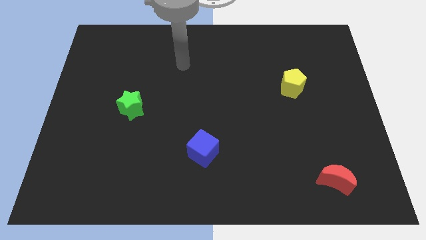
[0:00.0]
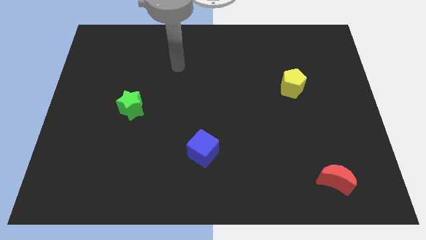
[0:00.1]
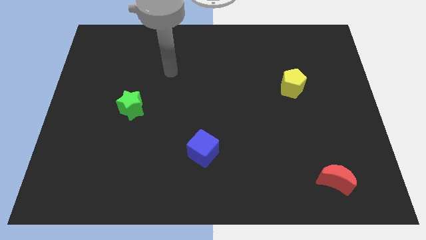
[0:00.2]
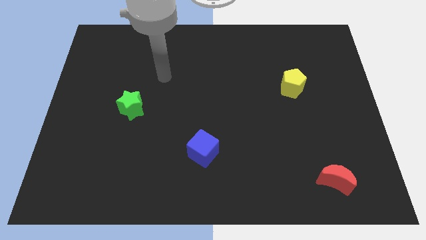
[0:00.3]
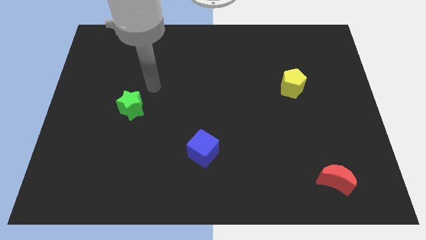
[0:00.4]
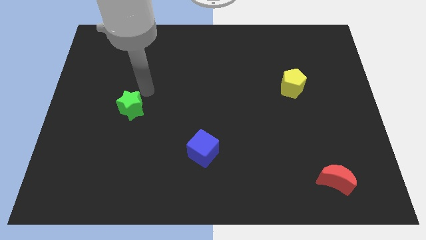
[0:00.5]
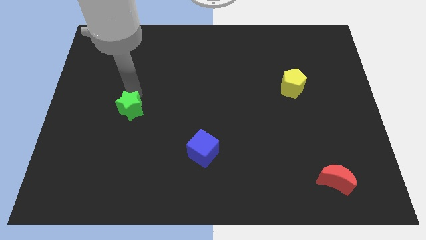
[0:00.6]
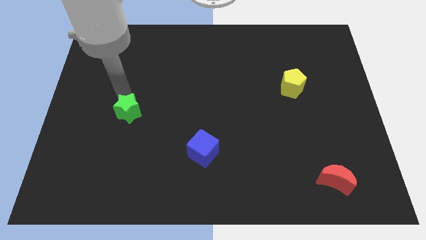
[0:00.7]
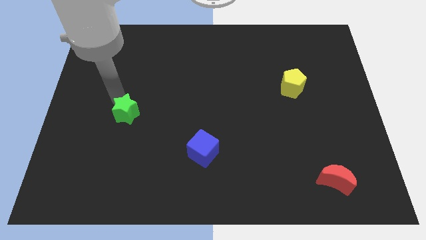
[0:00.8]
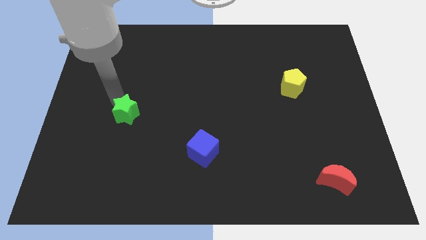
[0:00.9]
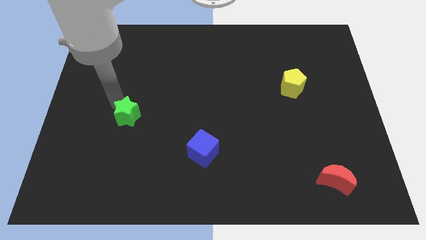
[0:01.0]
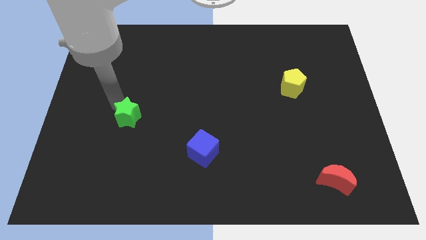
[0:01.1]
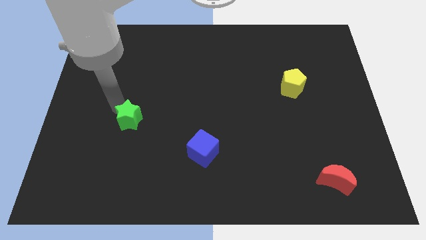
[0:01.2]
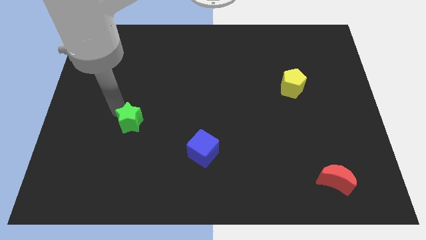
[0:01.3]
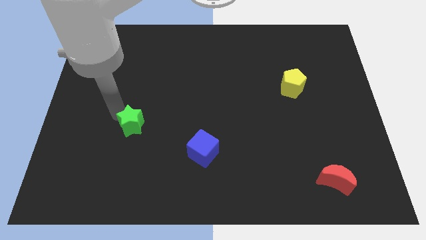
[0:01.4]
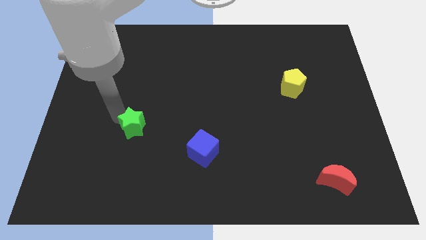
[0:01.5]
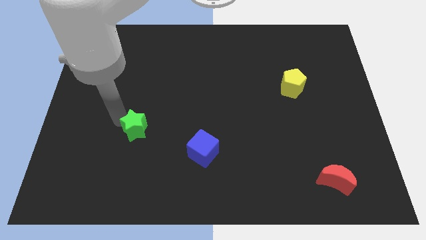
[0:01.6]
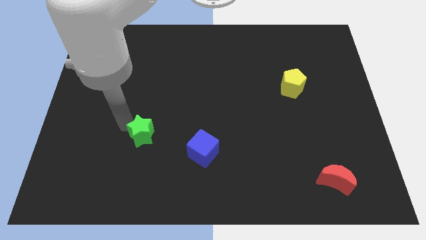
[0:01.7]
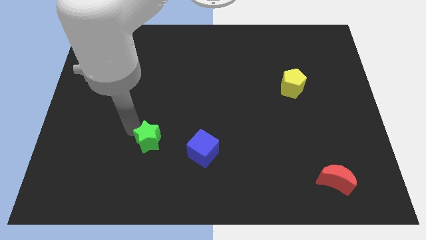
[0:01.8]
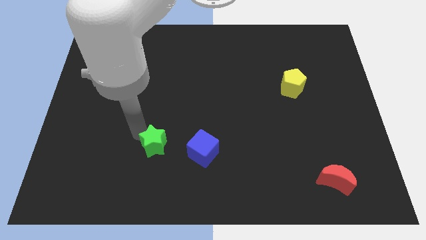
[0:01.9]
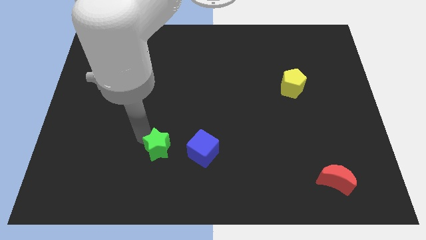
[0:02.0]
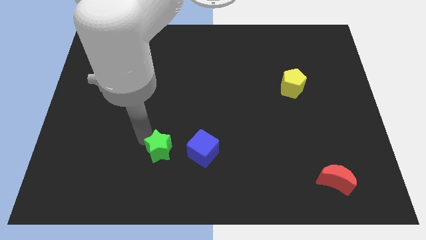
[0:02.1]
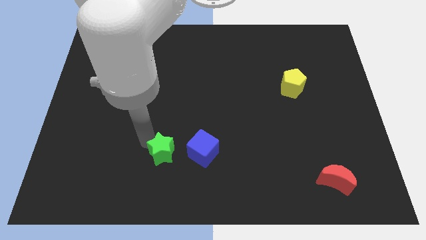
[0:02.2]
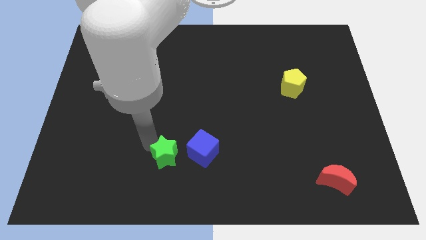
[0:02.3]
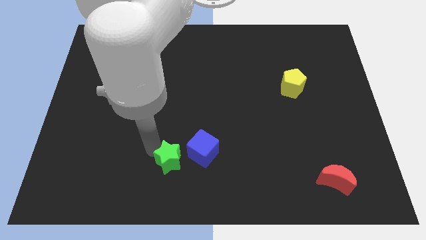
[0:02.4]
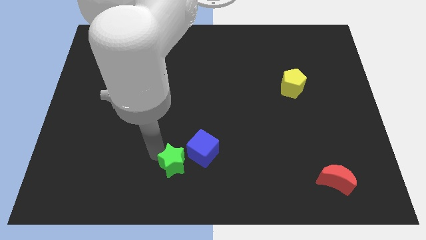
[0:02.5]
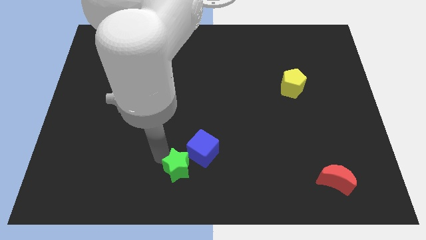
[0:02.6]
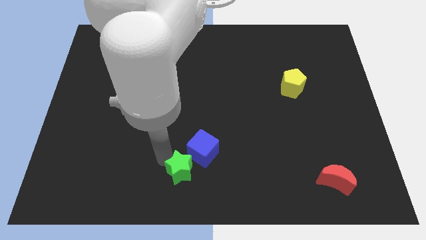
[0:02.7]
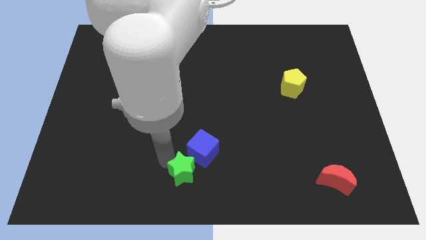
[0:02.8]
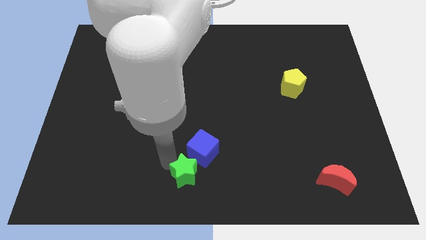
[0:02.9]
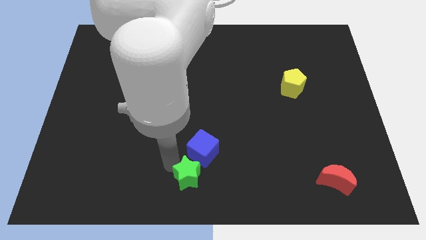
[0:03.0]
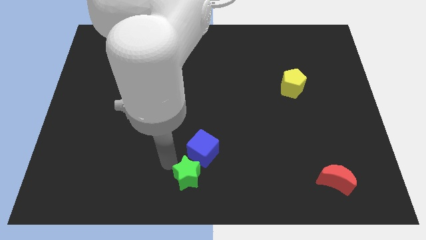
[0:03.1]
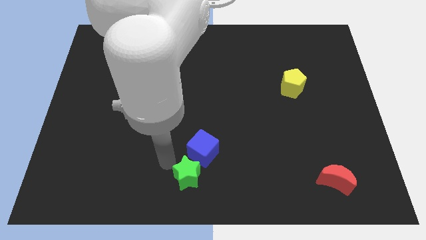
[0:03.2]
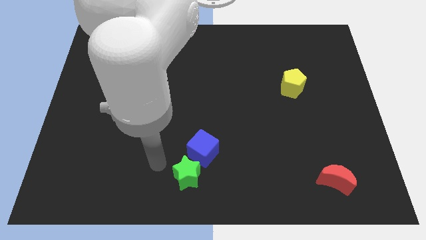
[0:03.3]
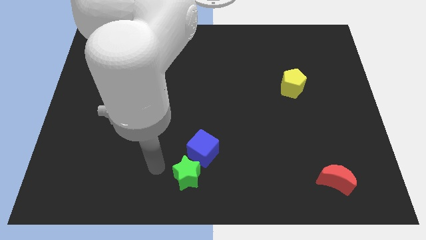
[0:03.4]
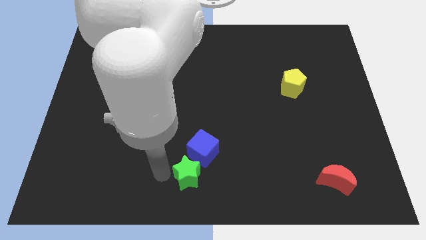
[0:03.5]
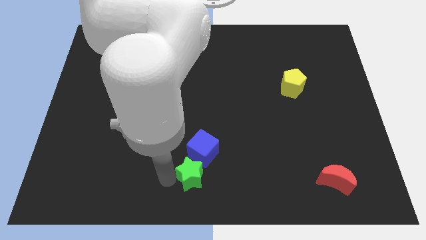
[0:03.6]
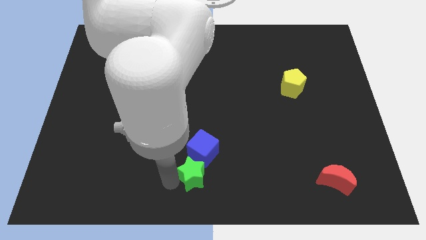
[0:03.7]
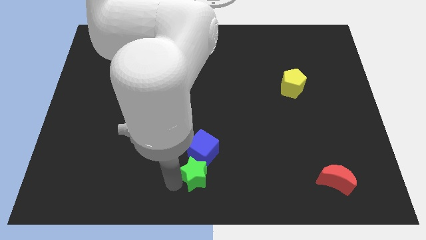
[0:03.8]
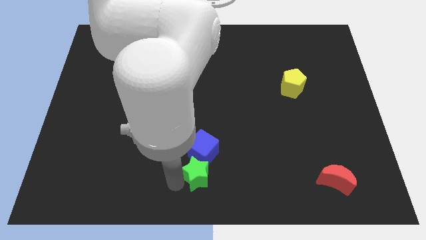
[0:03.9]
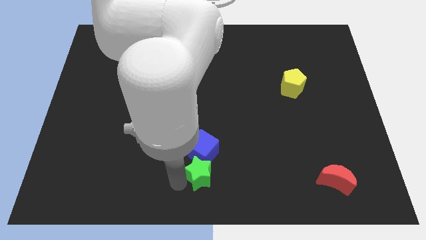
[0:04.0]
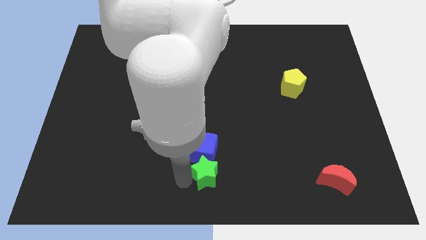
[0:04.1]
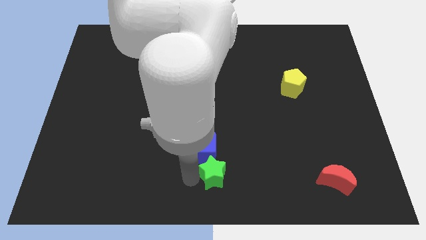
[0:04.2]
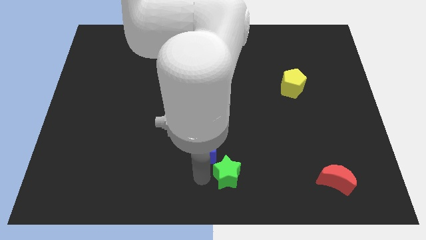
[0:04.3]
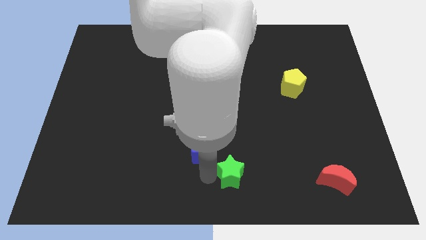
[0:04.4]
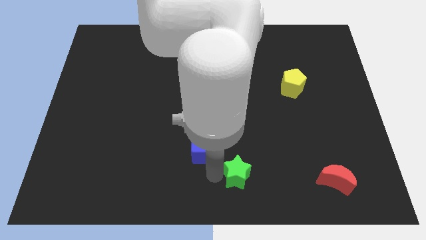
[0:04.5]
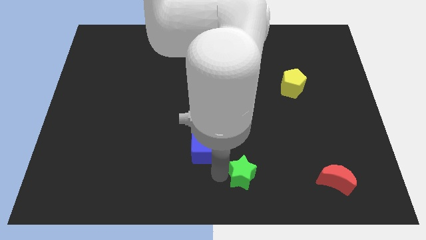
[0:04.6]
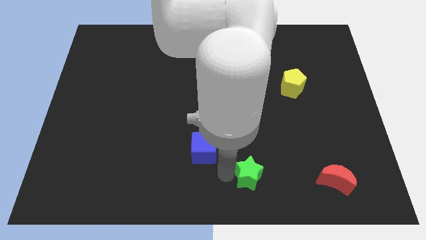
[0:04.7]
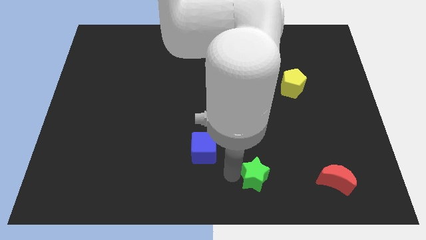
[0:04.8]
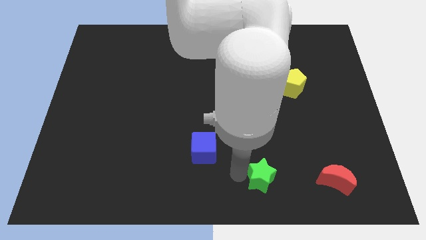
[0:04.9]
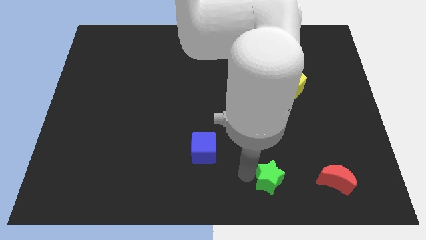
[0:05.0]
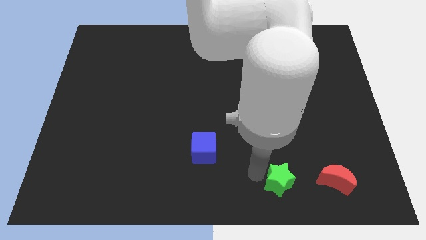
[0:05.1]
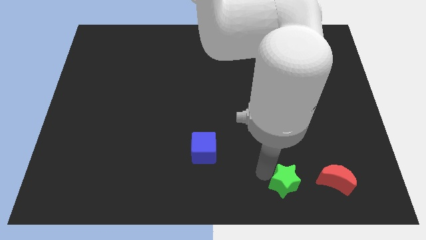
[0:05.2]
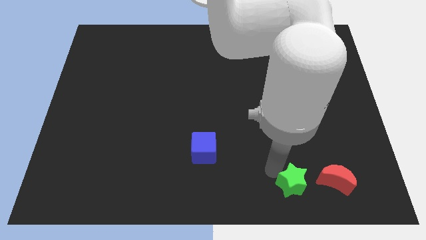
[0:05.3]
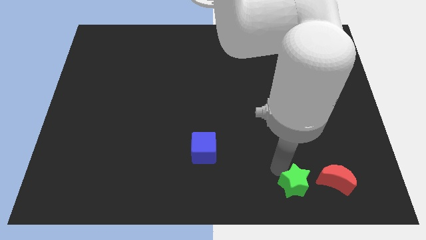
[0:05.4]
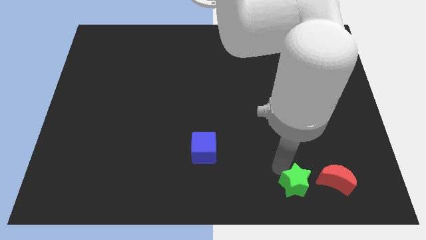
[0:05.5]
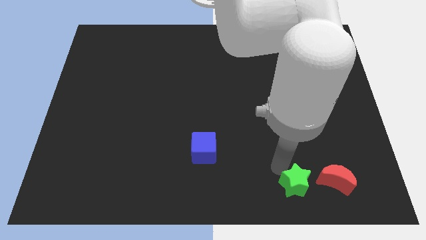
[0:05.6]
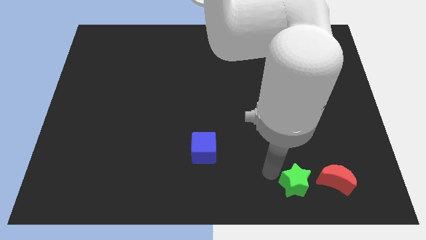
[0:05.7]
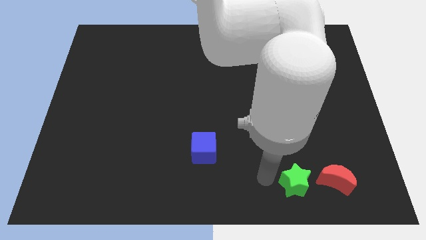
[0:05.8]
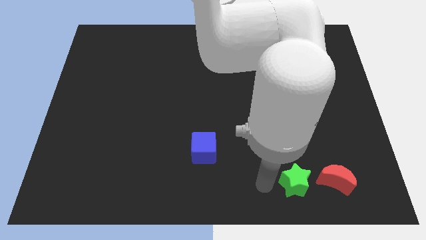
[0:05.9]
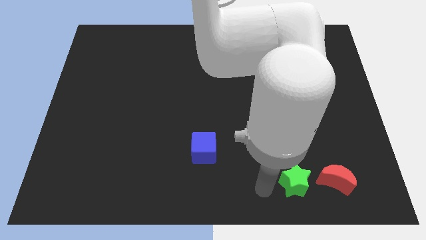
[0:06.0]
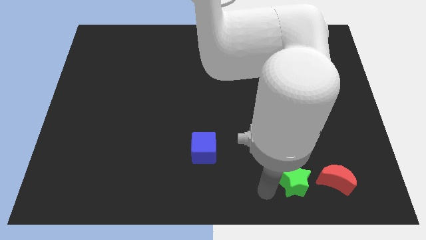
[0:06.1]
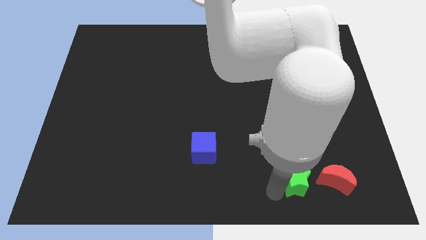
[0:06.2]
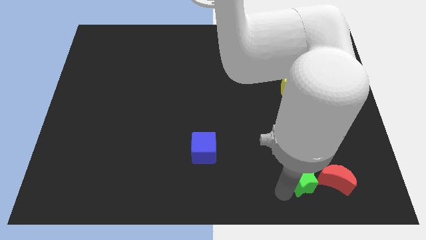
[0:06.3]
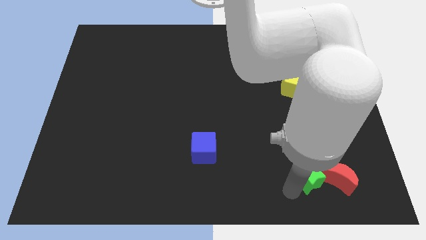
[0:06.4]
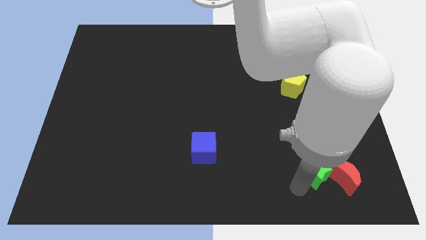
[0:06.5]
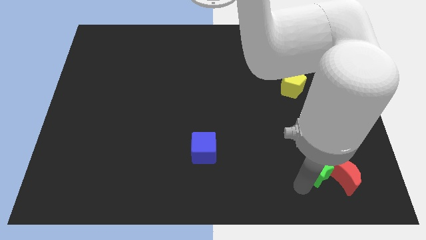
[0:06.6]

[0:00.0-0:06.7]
put the star to the red block

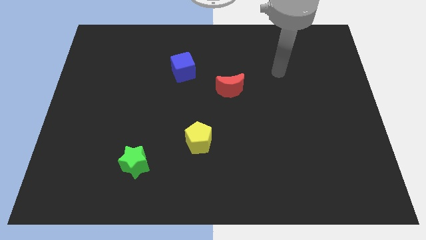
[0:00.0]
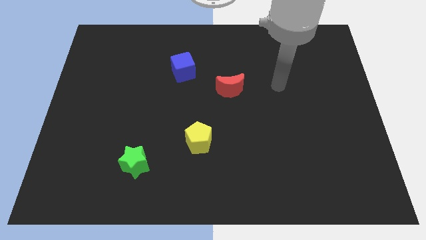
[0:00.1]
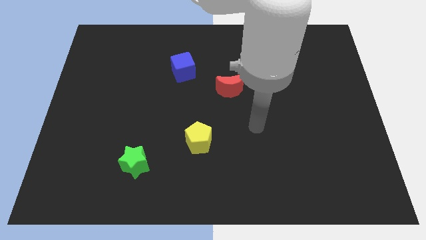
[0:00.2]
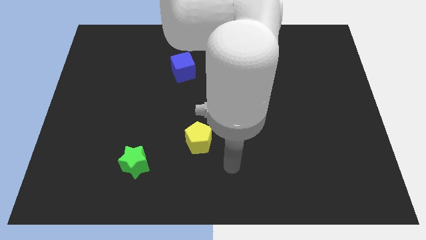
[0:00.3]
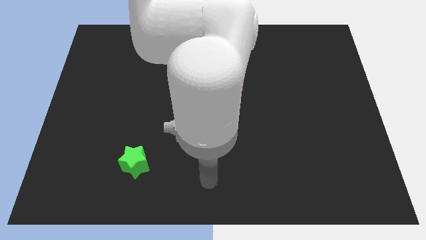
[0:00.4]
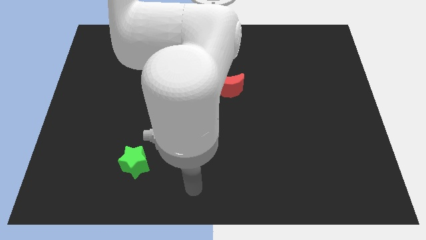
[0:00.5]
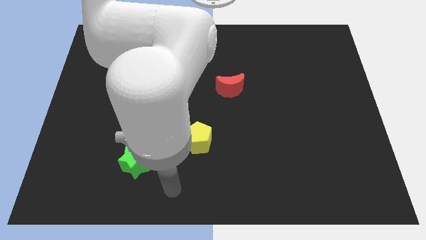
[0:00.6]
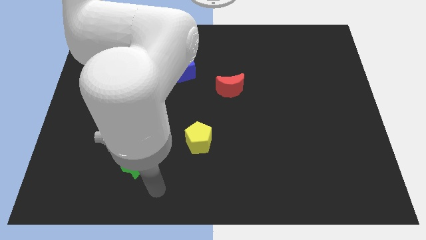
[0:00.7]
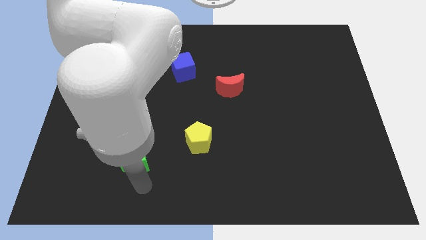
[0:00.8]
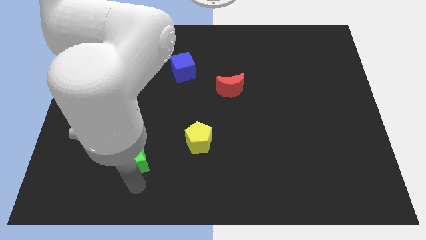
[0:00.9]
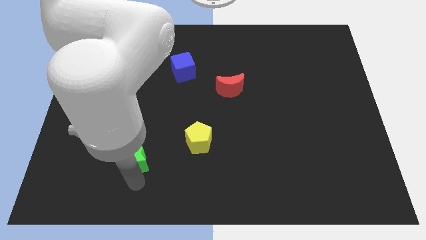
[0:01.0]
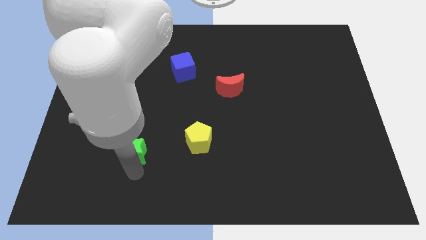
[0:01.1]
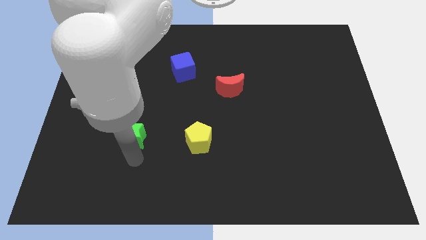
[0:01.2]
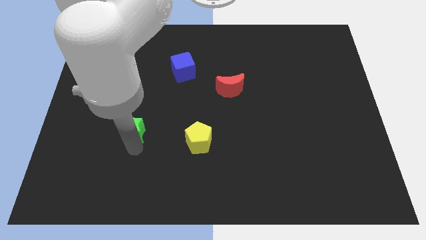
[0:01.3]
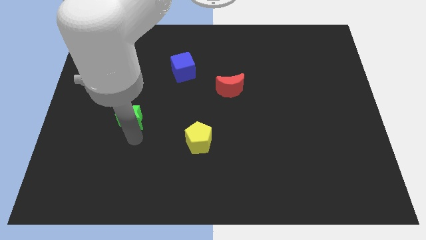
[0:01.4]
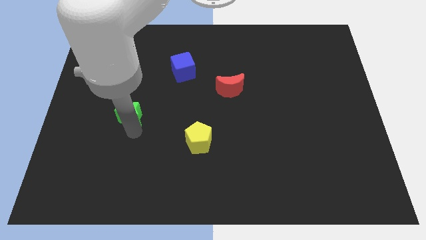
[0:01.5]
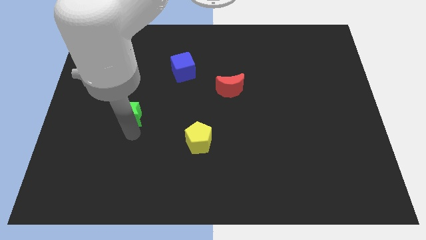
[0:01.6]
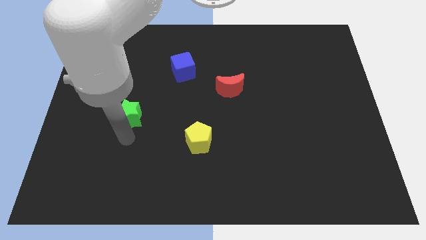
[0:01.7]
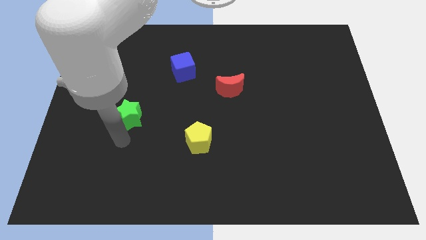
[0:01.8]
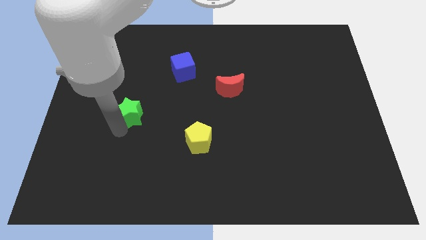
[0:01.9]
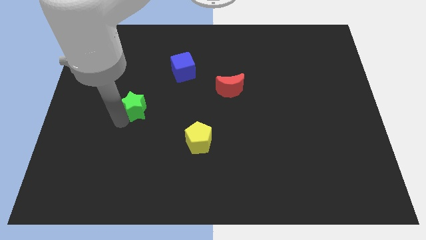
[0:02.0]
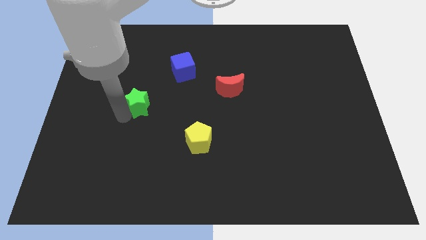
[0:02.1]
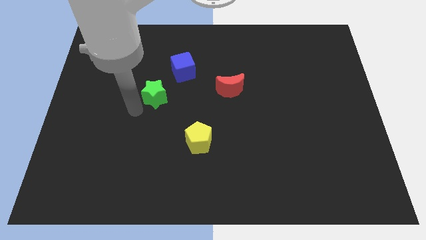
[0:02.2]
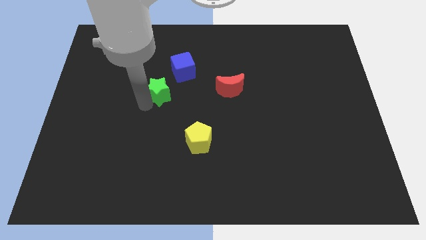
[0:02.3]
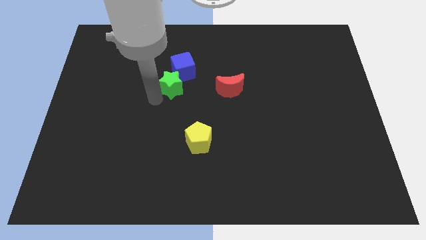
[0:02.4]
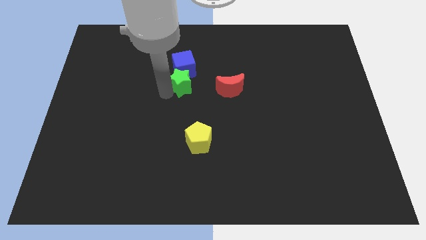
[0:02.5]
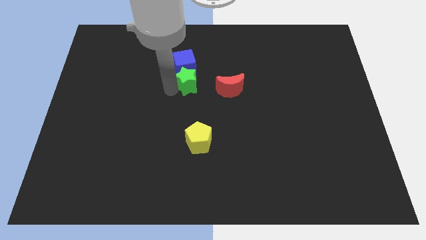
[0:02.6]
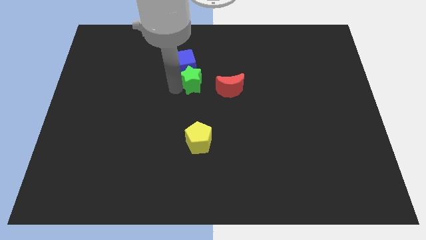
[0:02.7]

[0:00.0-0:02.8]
put the green block to the blue cube
